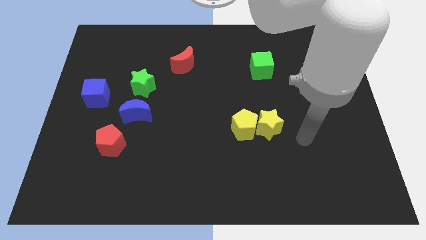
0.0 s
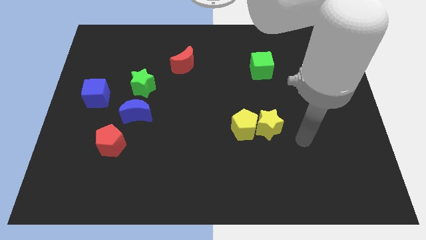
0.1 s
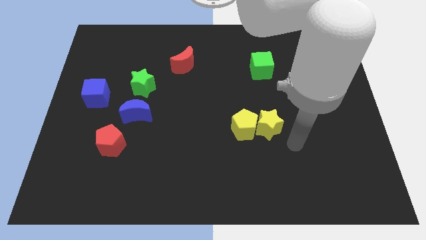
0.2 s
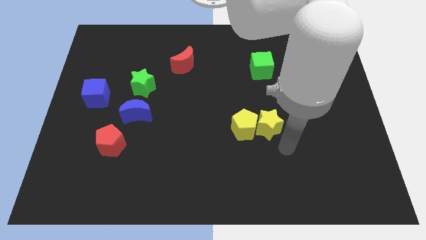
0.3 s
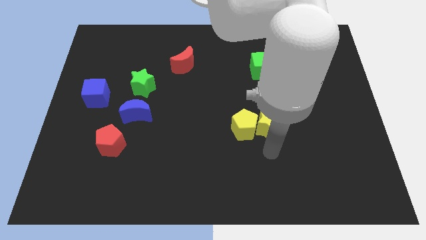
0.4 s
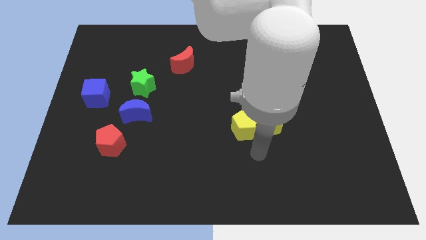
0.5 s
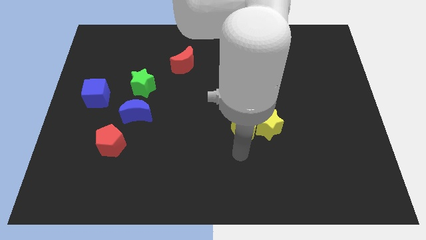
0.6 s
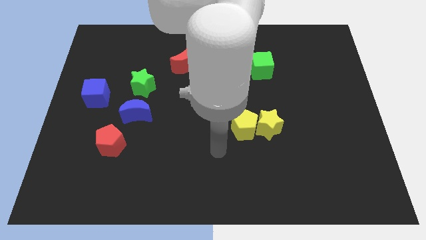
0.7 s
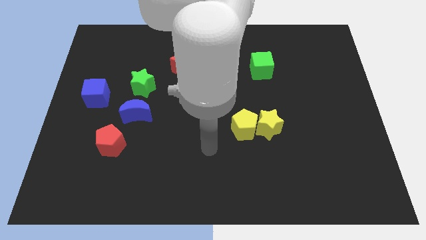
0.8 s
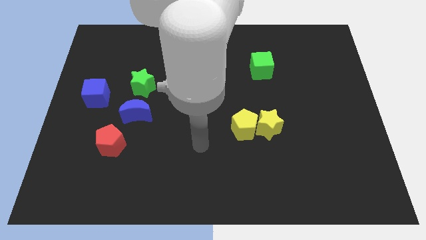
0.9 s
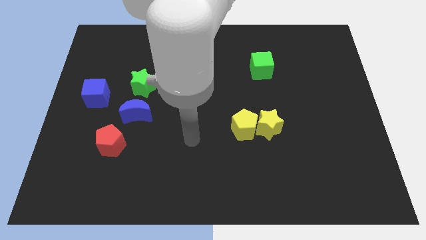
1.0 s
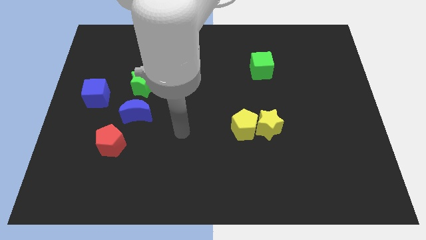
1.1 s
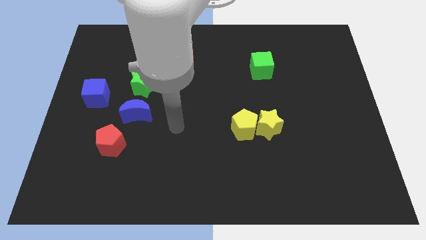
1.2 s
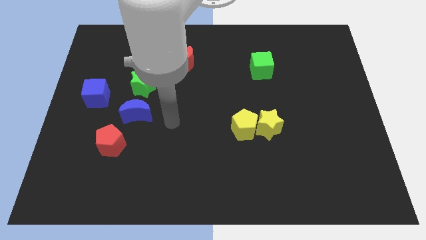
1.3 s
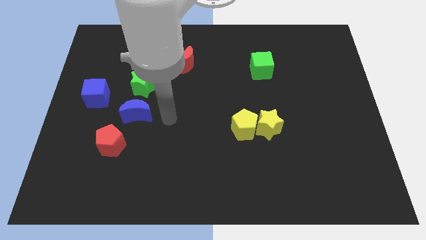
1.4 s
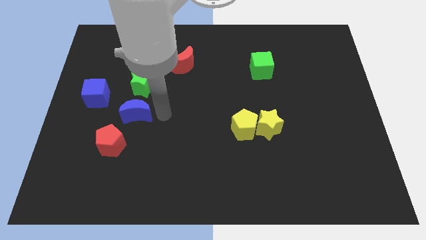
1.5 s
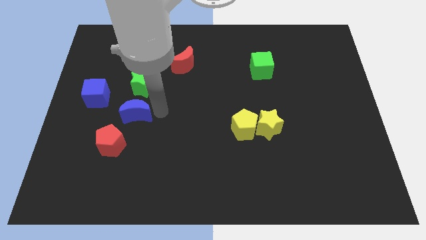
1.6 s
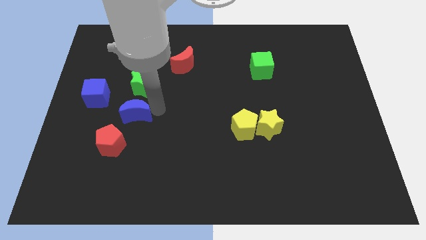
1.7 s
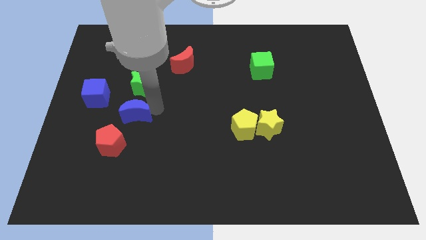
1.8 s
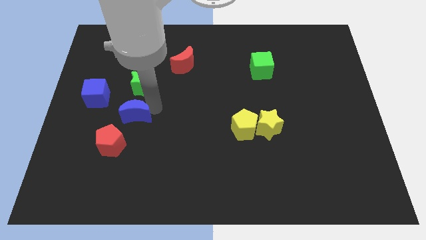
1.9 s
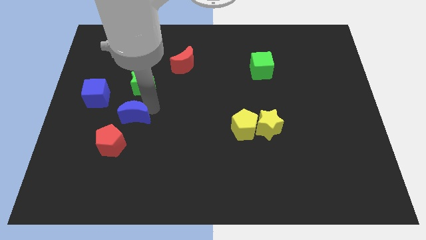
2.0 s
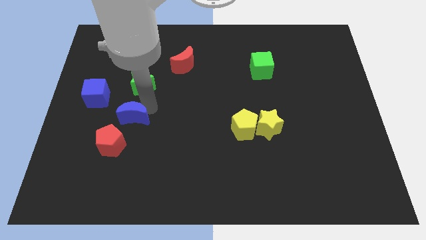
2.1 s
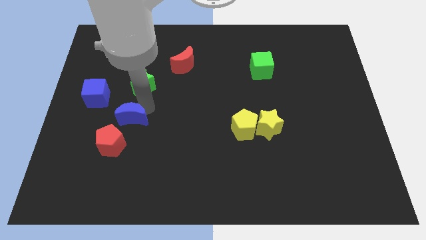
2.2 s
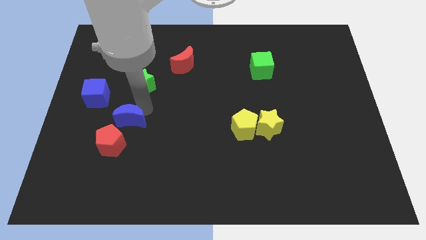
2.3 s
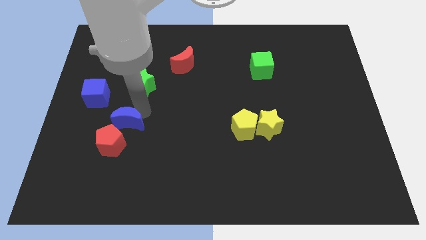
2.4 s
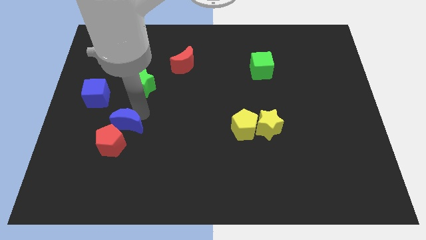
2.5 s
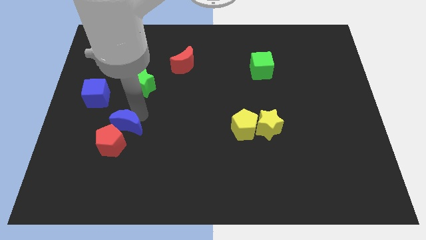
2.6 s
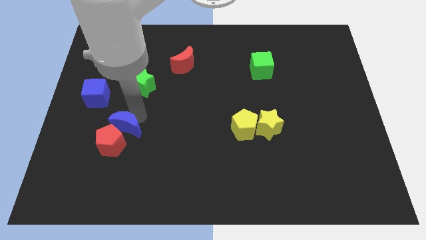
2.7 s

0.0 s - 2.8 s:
slide the blue moon to the red pentagon

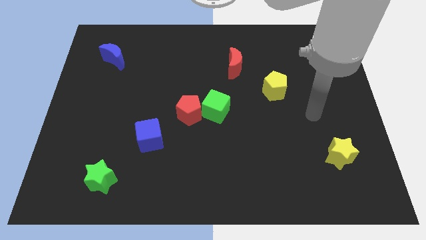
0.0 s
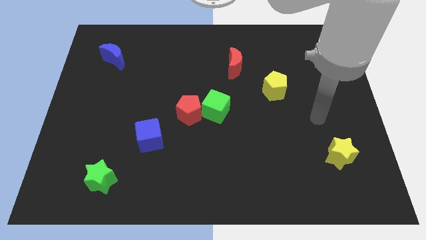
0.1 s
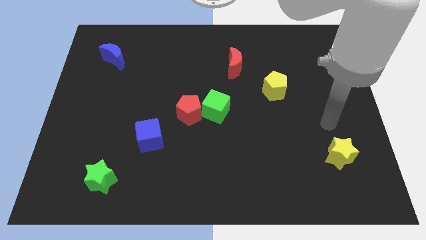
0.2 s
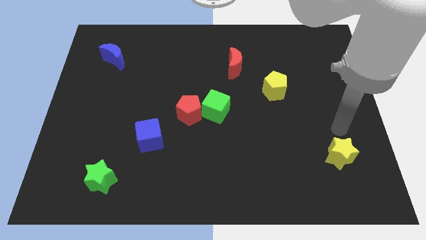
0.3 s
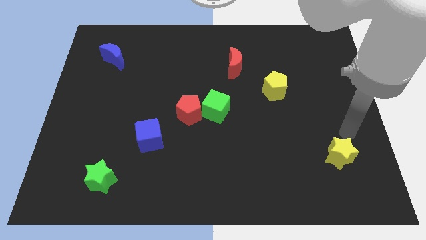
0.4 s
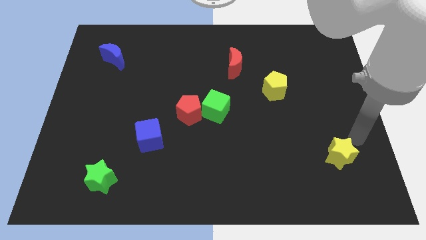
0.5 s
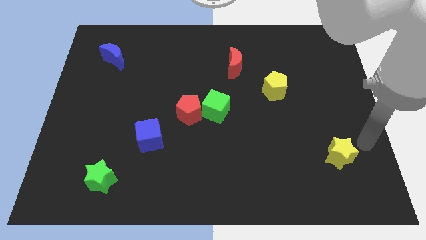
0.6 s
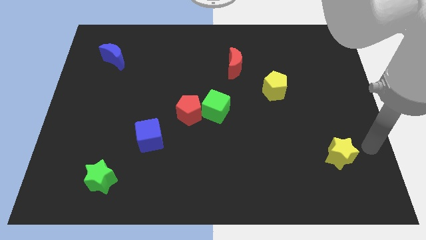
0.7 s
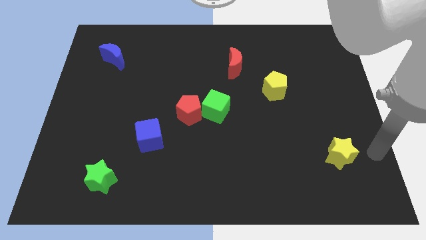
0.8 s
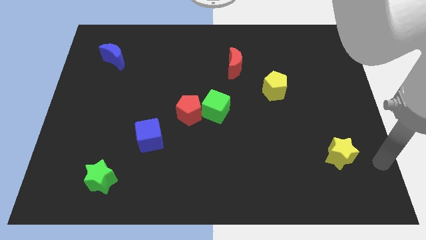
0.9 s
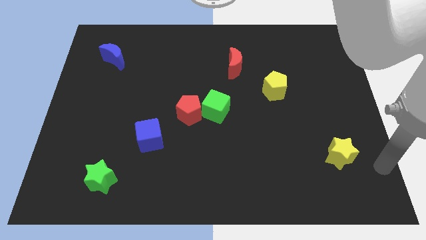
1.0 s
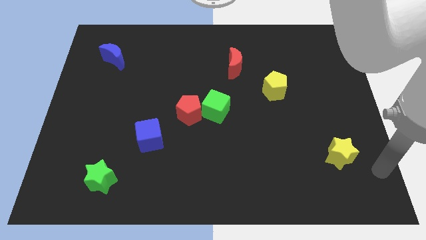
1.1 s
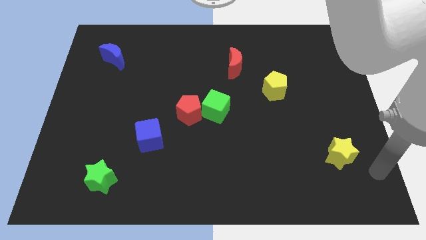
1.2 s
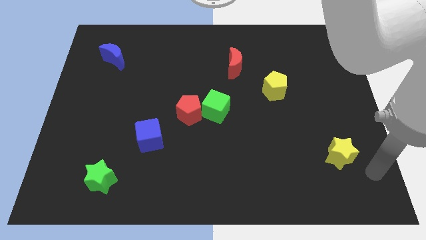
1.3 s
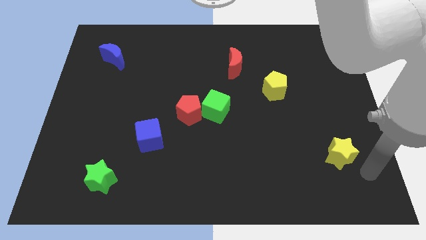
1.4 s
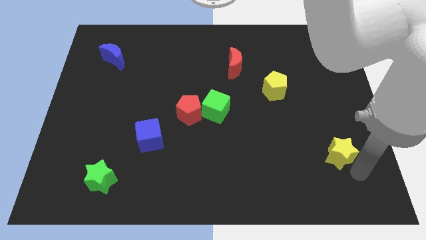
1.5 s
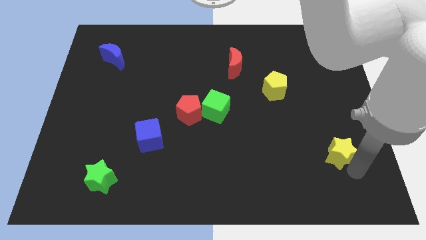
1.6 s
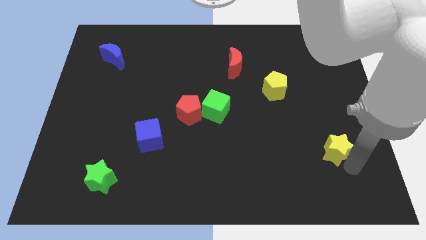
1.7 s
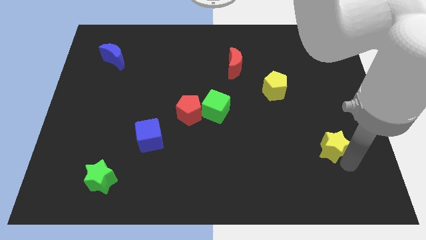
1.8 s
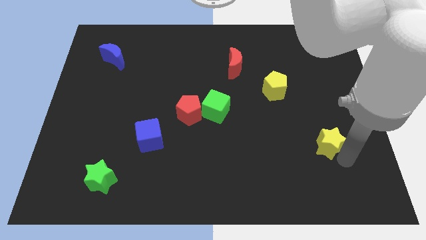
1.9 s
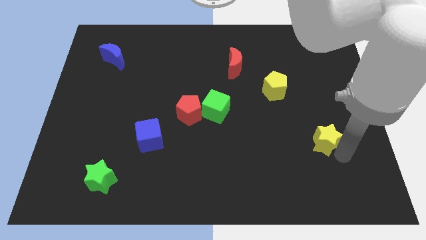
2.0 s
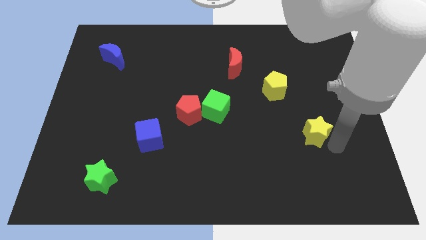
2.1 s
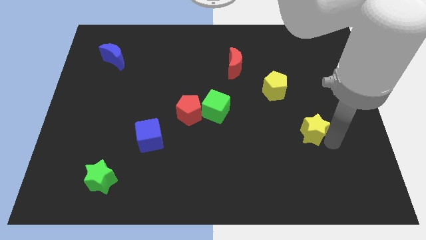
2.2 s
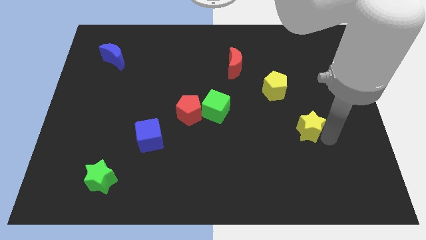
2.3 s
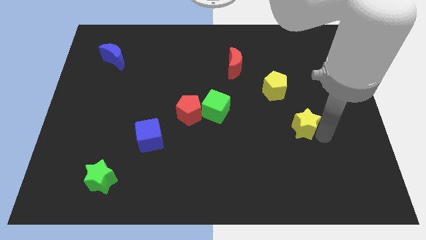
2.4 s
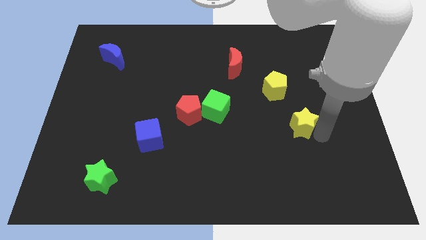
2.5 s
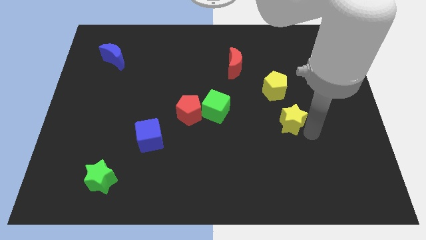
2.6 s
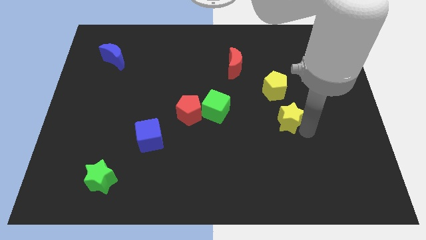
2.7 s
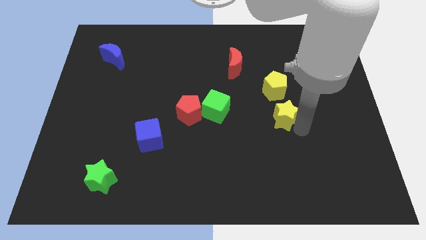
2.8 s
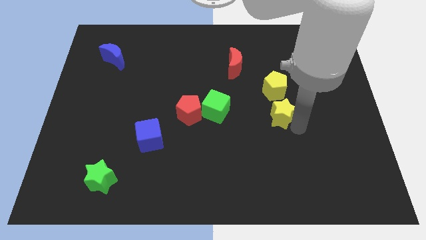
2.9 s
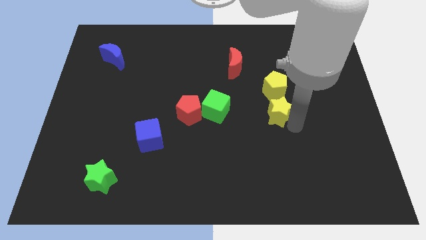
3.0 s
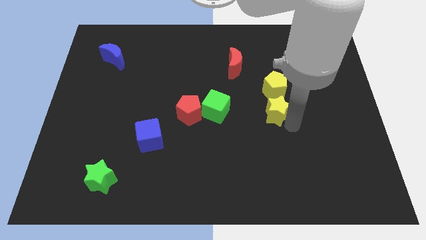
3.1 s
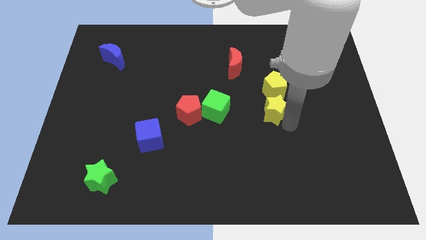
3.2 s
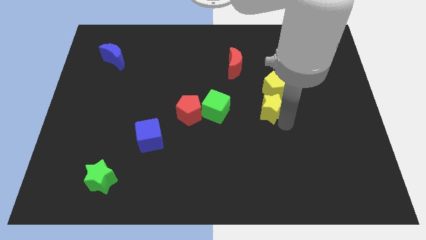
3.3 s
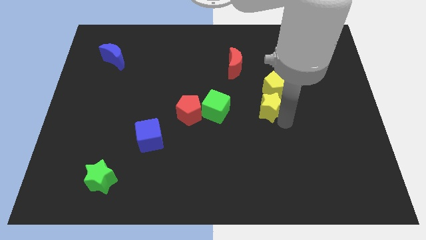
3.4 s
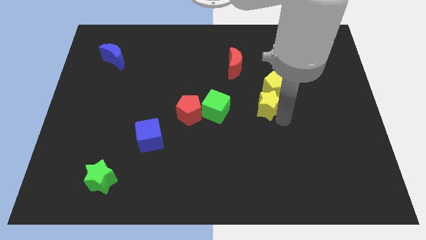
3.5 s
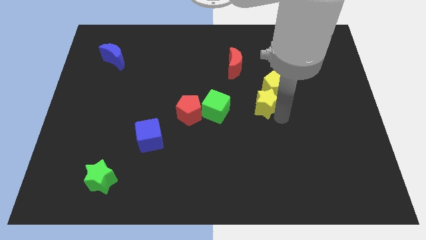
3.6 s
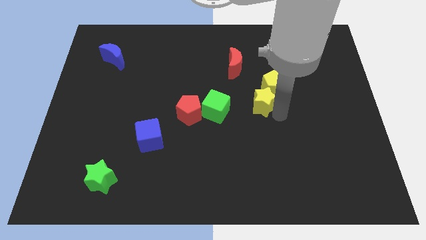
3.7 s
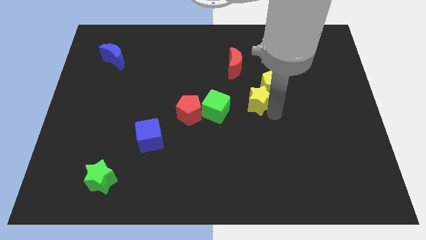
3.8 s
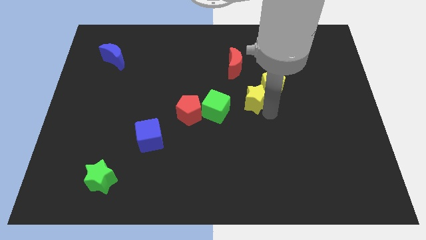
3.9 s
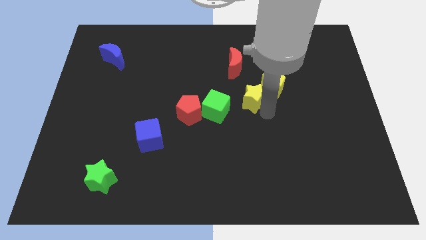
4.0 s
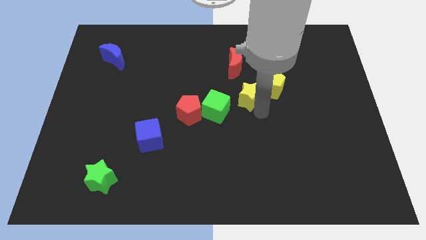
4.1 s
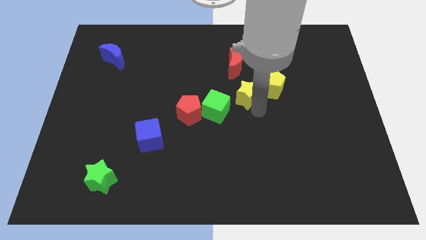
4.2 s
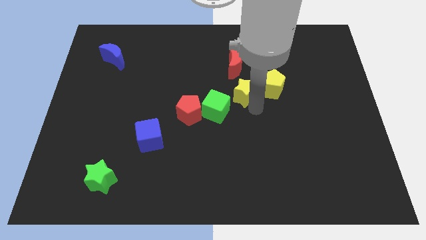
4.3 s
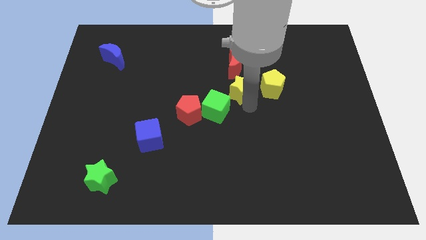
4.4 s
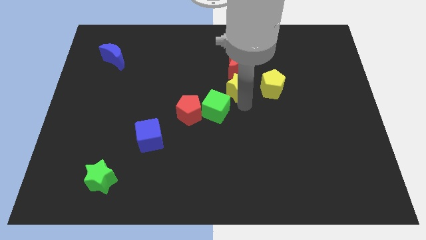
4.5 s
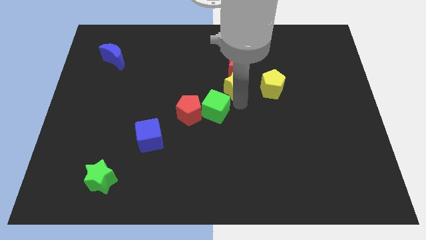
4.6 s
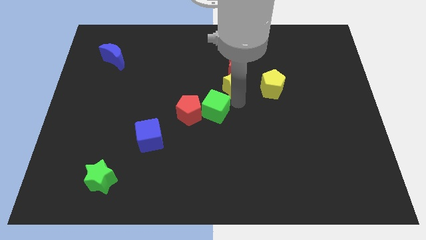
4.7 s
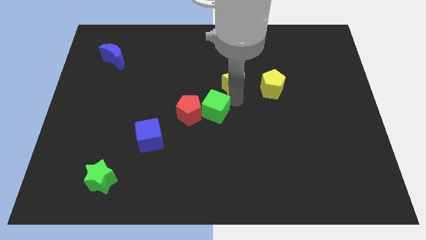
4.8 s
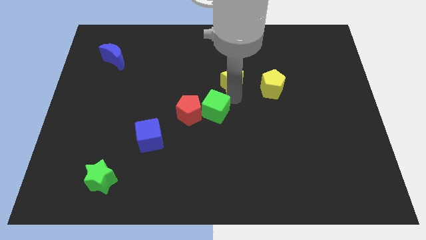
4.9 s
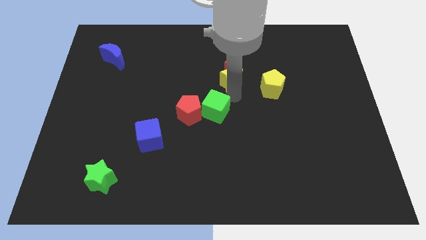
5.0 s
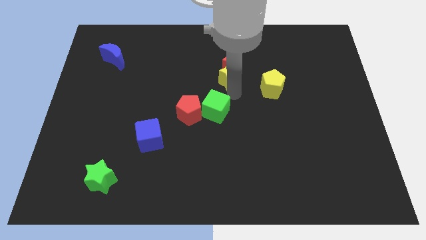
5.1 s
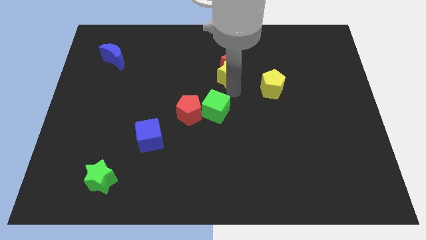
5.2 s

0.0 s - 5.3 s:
push the yellow star close to the red moon
